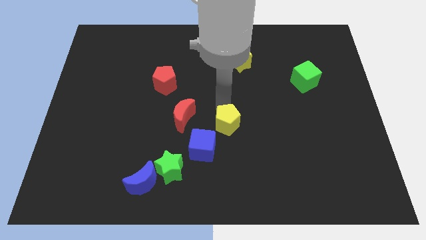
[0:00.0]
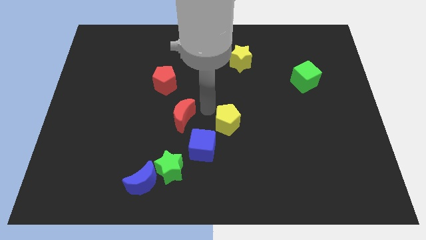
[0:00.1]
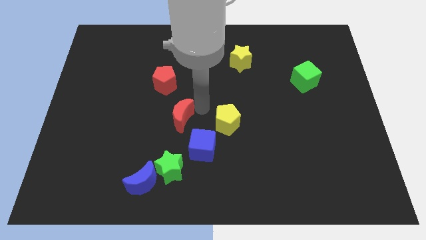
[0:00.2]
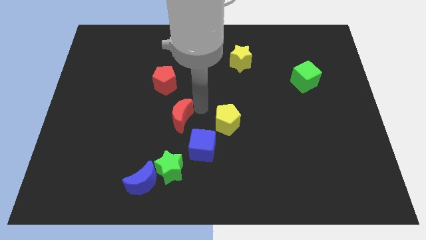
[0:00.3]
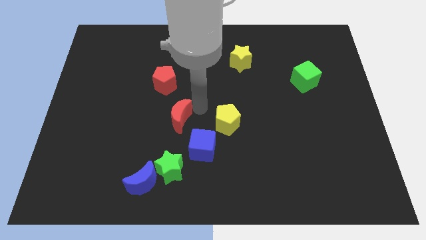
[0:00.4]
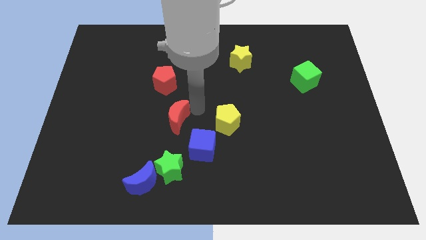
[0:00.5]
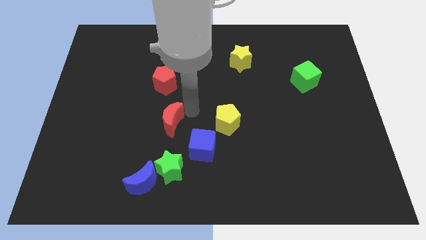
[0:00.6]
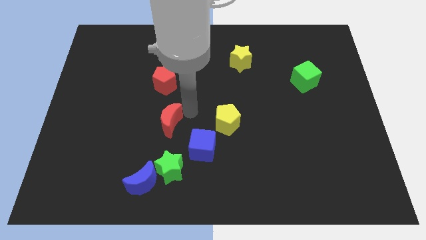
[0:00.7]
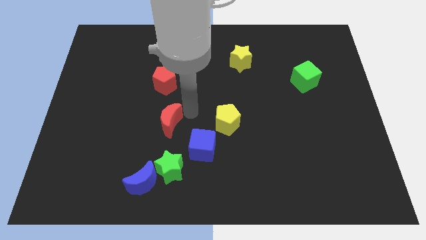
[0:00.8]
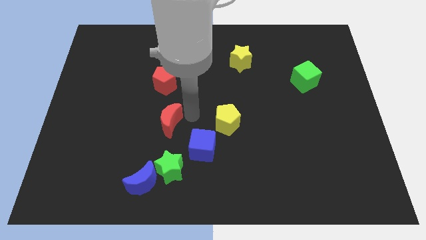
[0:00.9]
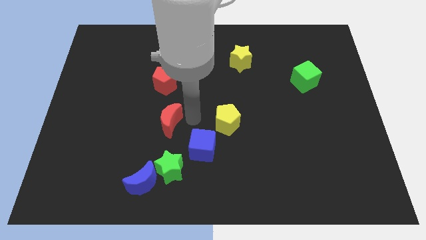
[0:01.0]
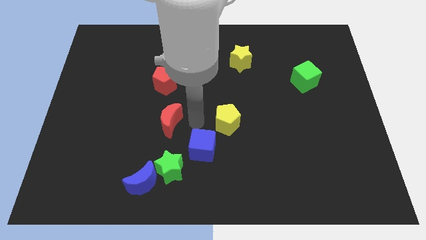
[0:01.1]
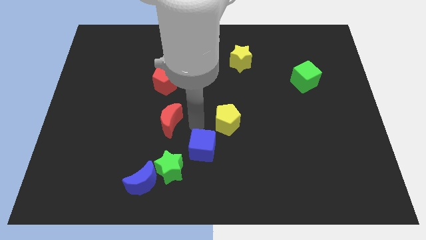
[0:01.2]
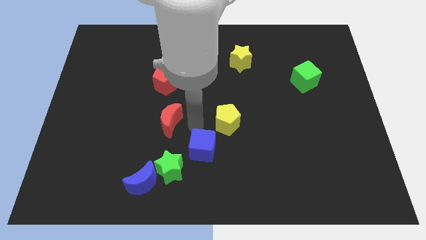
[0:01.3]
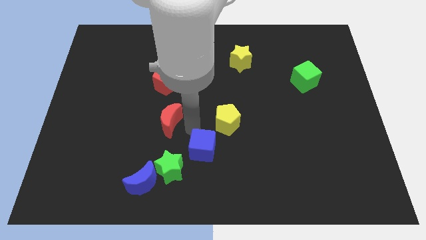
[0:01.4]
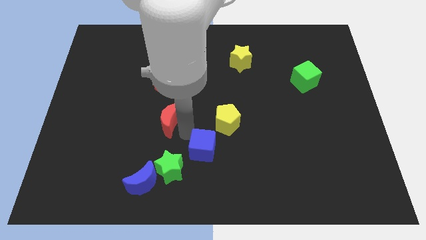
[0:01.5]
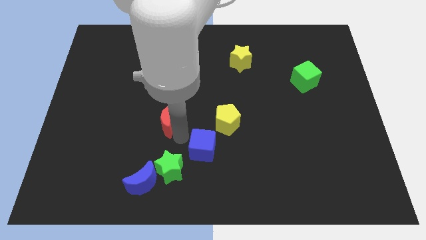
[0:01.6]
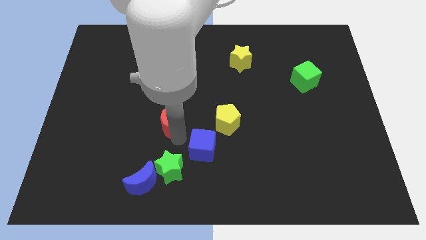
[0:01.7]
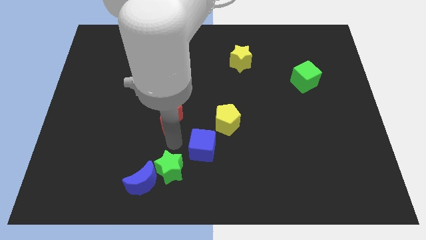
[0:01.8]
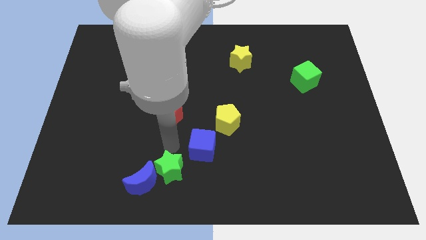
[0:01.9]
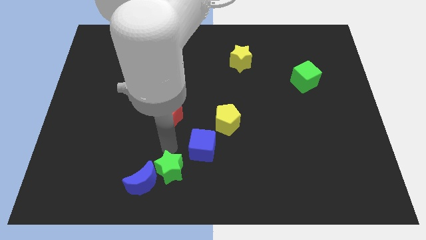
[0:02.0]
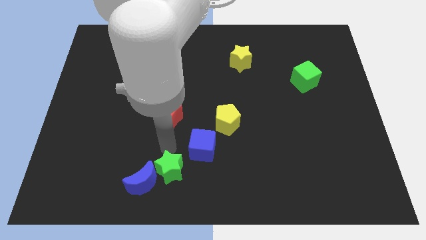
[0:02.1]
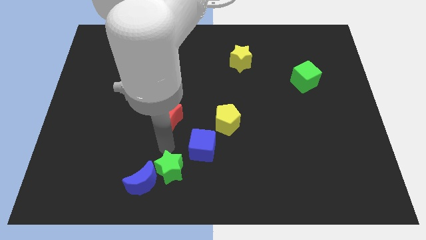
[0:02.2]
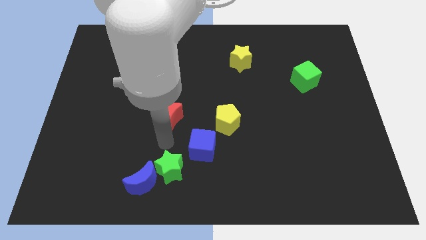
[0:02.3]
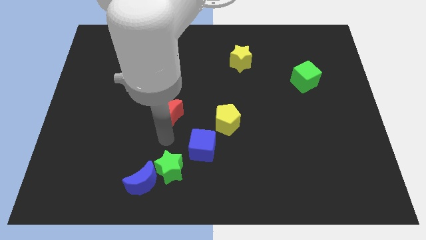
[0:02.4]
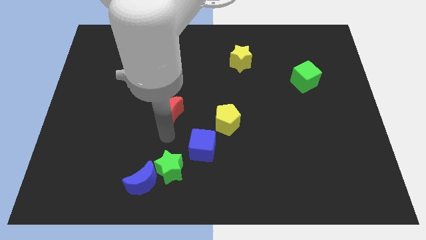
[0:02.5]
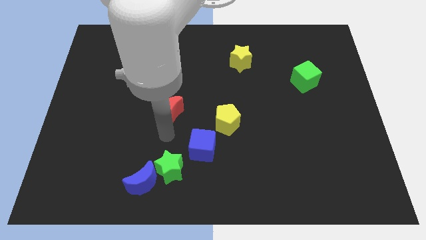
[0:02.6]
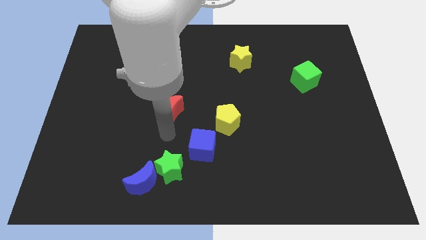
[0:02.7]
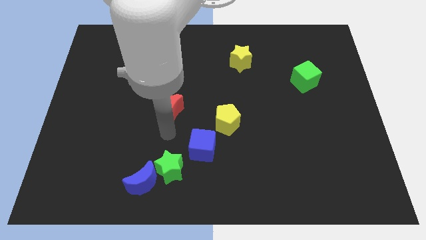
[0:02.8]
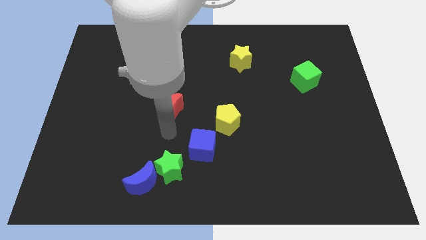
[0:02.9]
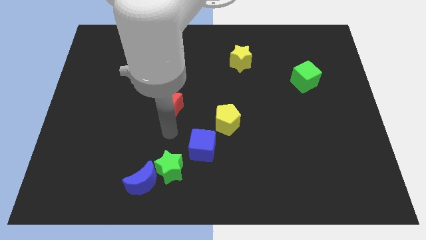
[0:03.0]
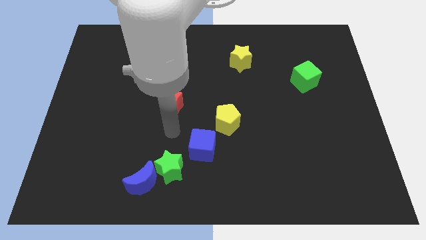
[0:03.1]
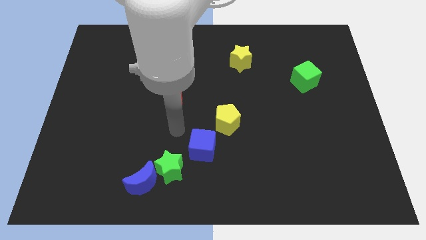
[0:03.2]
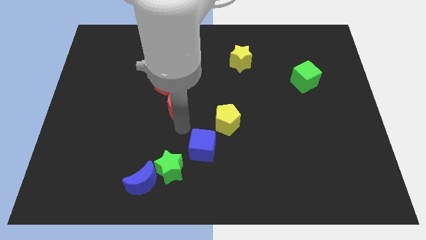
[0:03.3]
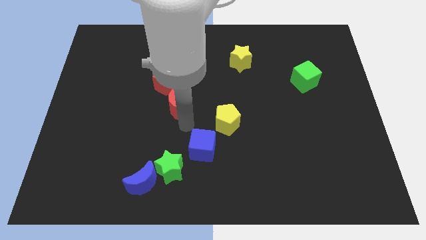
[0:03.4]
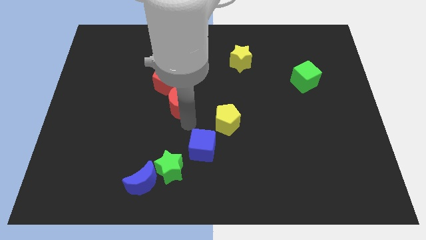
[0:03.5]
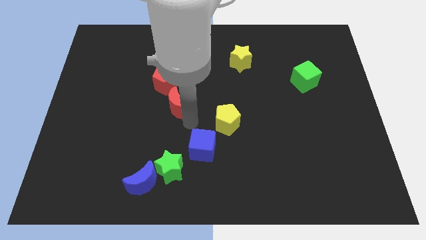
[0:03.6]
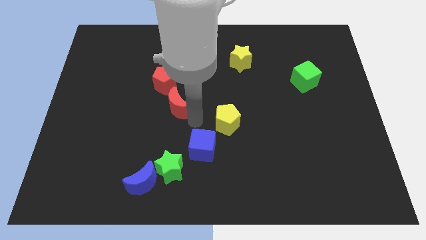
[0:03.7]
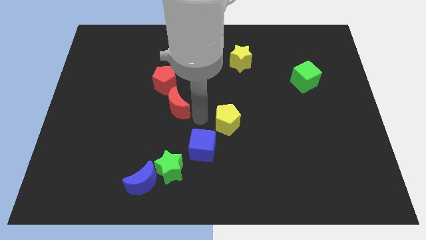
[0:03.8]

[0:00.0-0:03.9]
move the red moon to the bottom of the red pentagon

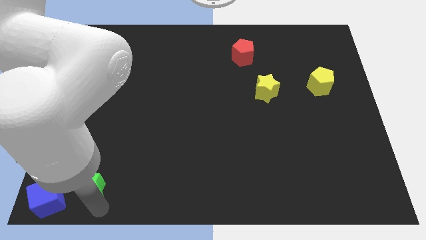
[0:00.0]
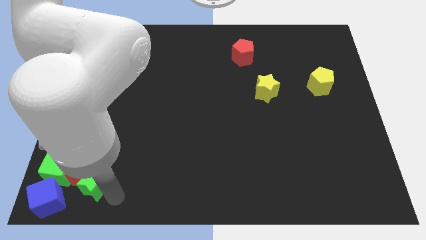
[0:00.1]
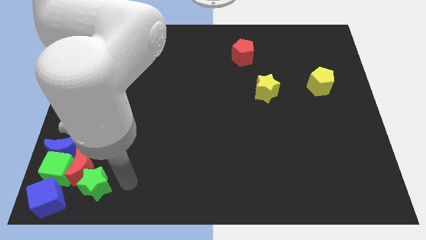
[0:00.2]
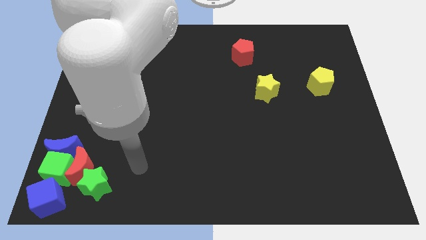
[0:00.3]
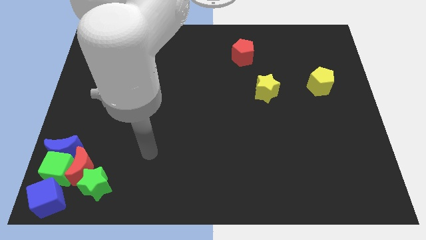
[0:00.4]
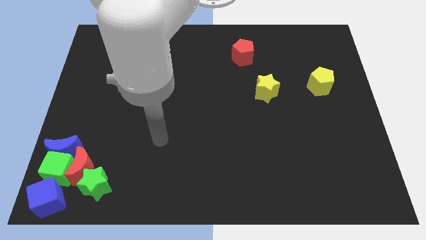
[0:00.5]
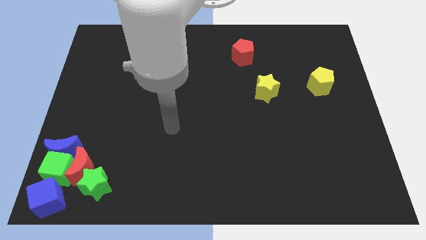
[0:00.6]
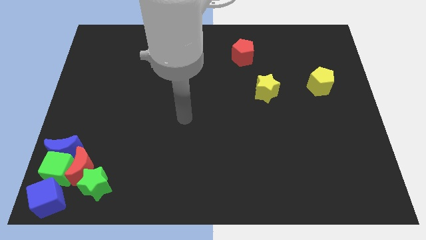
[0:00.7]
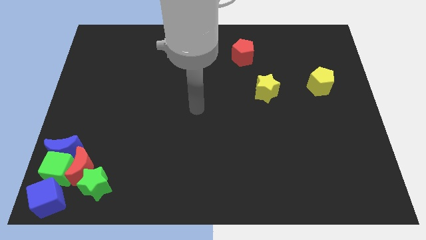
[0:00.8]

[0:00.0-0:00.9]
point your arm at the center

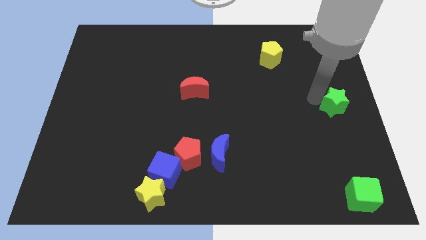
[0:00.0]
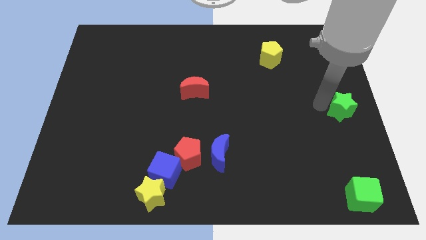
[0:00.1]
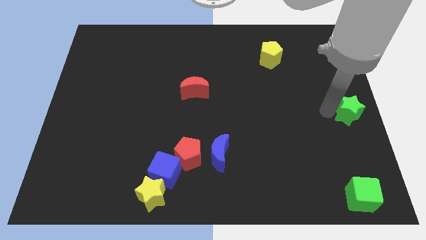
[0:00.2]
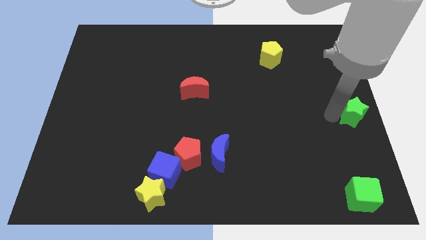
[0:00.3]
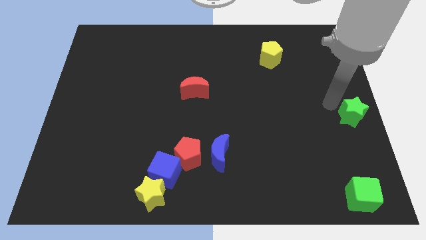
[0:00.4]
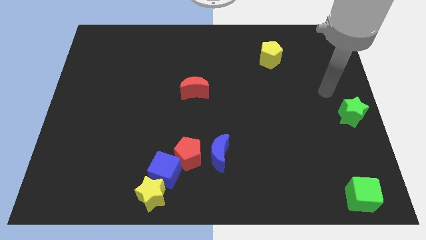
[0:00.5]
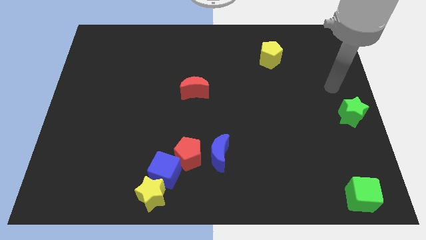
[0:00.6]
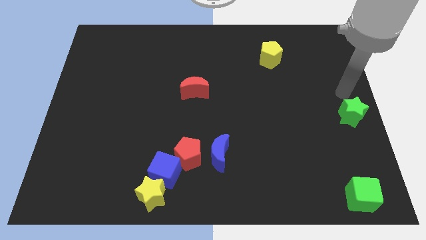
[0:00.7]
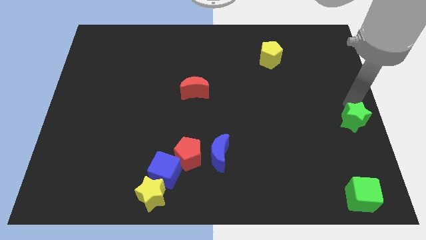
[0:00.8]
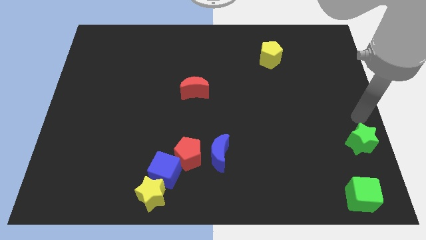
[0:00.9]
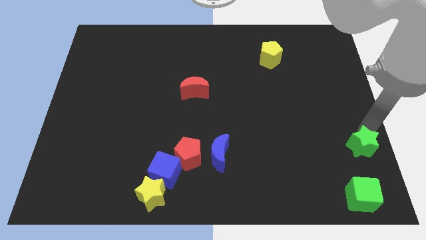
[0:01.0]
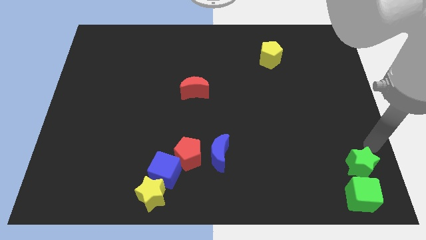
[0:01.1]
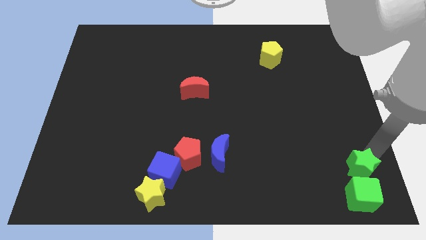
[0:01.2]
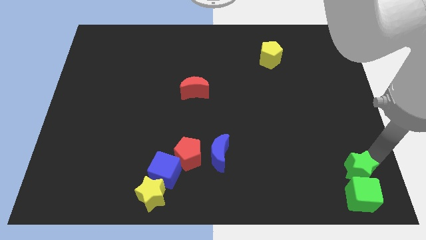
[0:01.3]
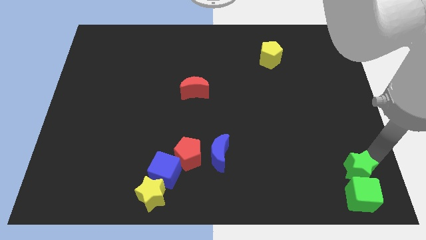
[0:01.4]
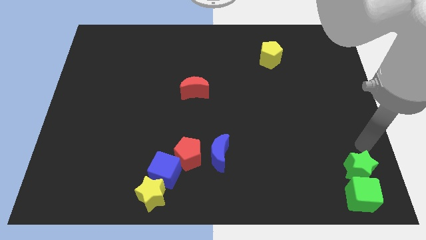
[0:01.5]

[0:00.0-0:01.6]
place green star close to green cube

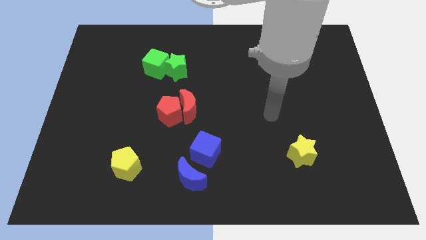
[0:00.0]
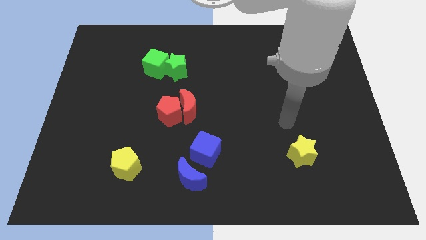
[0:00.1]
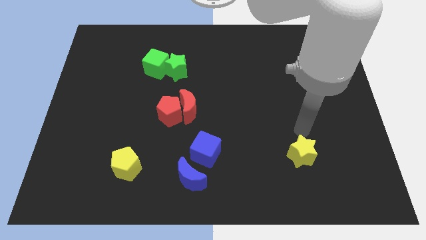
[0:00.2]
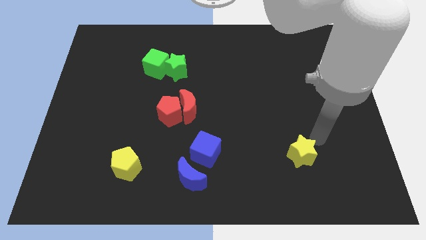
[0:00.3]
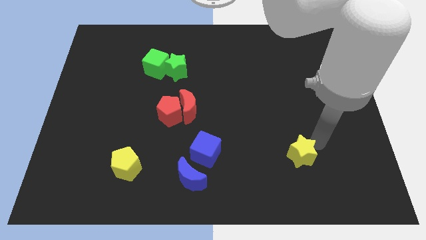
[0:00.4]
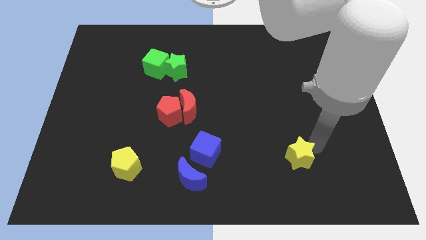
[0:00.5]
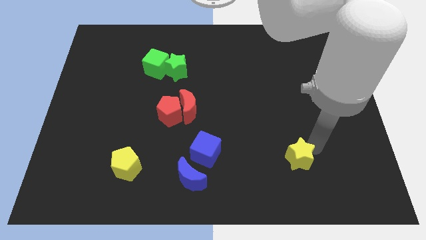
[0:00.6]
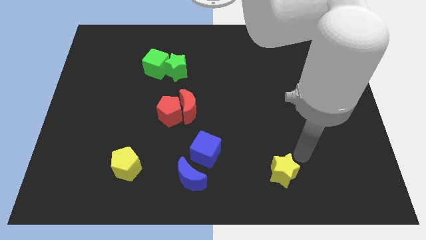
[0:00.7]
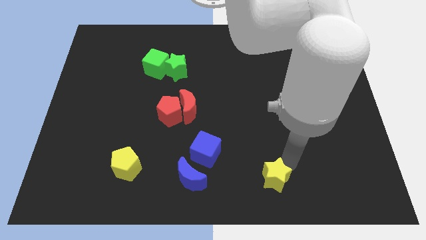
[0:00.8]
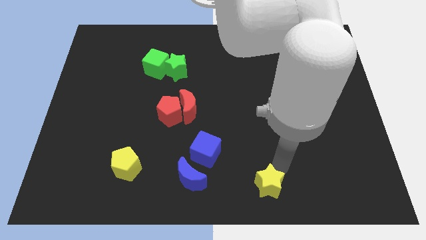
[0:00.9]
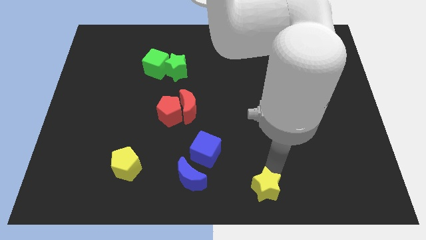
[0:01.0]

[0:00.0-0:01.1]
push the yellow star to the bottom

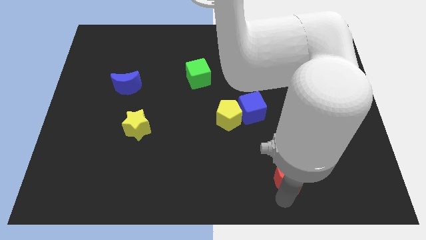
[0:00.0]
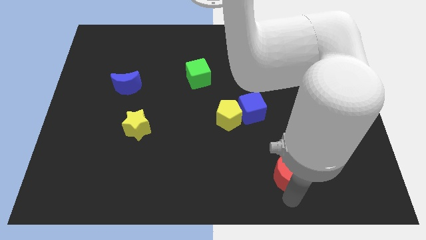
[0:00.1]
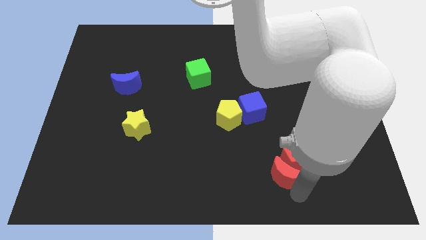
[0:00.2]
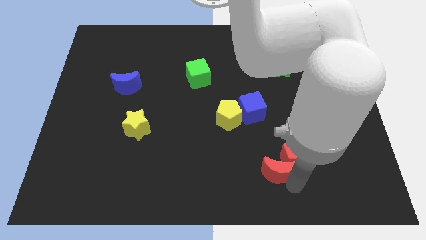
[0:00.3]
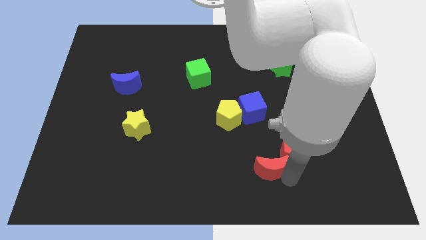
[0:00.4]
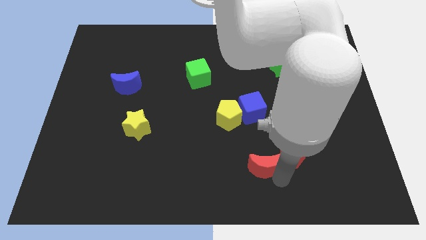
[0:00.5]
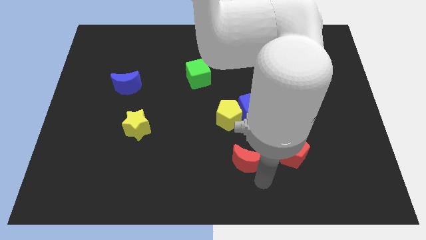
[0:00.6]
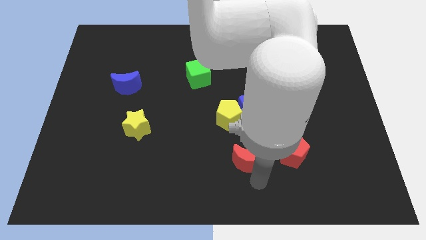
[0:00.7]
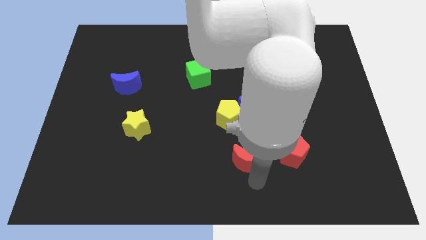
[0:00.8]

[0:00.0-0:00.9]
separate the red crescent and red pentagon

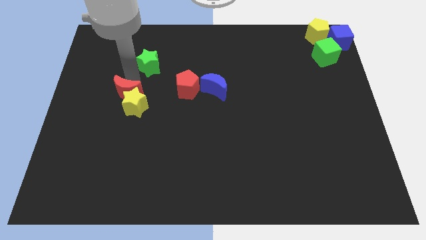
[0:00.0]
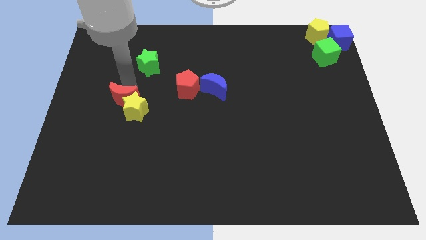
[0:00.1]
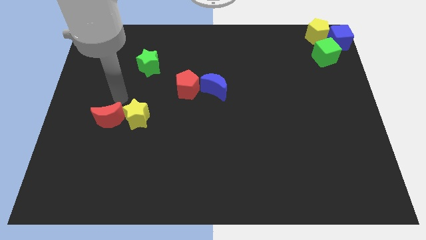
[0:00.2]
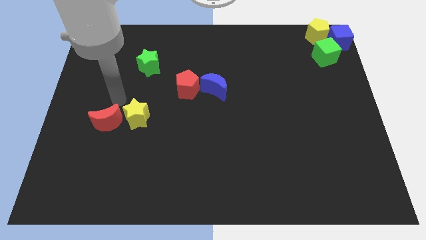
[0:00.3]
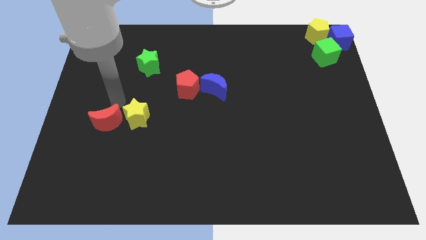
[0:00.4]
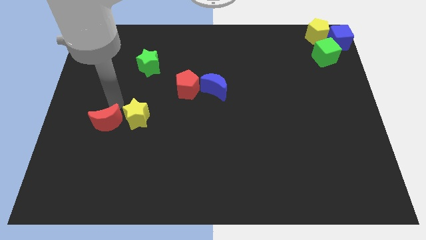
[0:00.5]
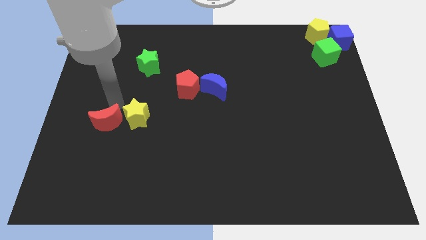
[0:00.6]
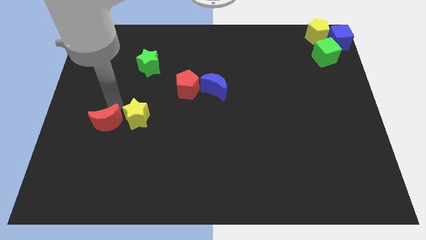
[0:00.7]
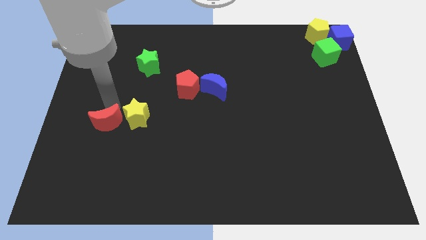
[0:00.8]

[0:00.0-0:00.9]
slide the red moon towards bottom
